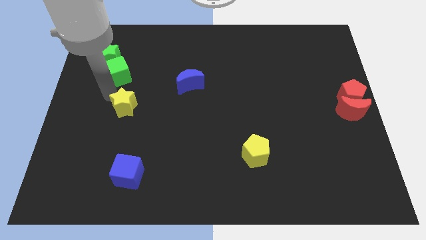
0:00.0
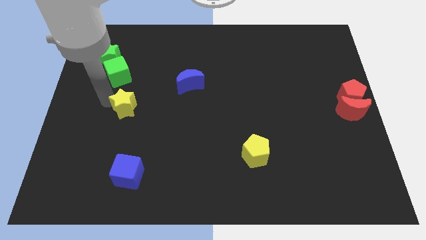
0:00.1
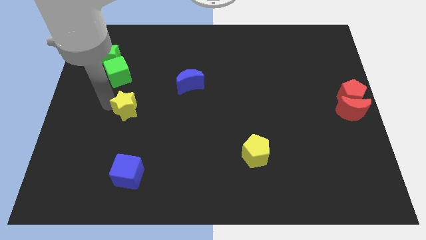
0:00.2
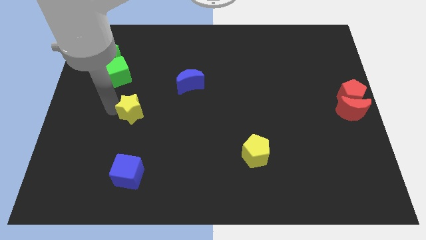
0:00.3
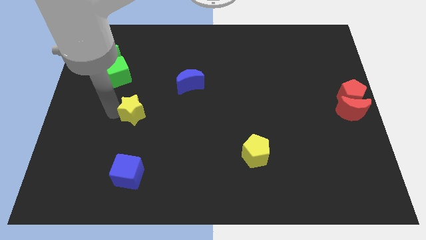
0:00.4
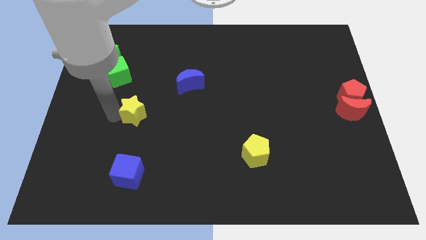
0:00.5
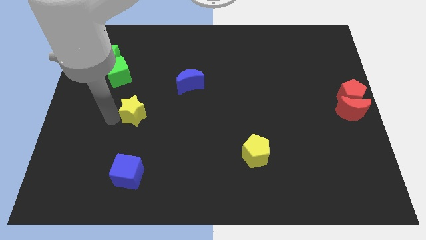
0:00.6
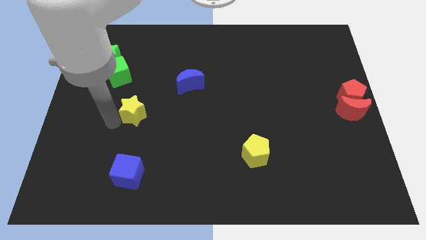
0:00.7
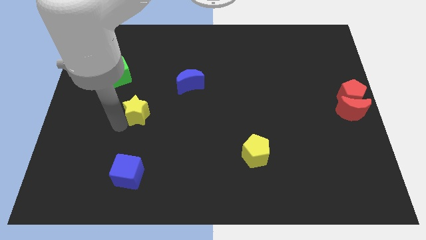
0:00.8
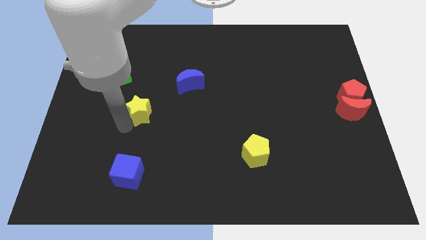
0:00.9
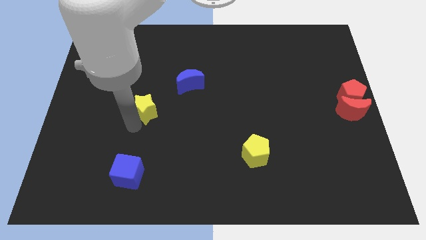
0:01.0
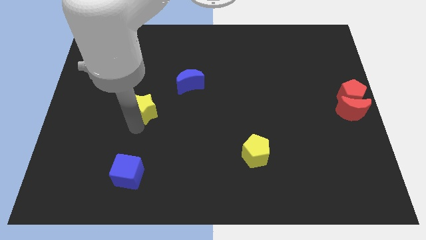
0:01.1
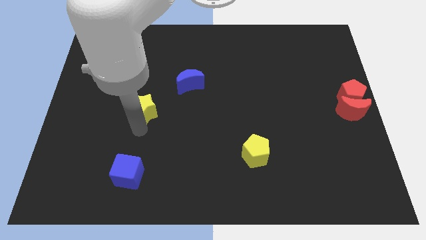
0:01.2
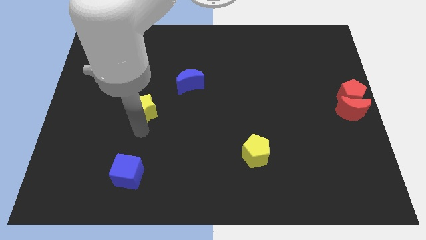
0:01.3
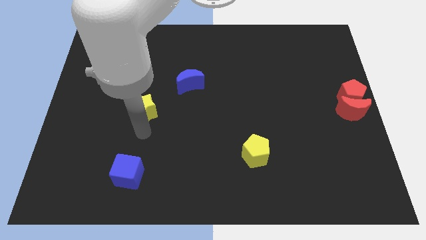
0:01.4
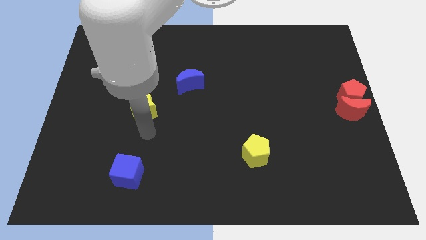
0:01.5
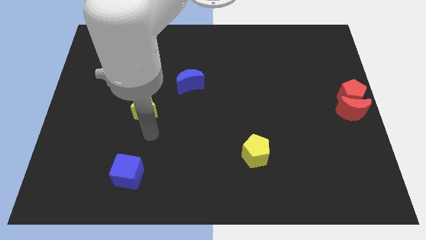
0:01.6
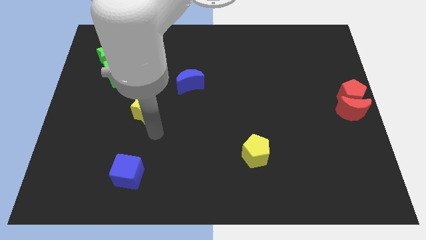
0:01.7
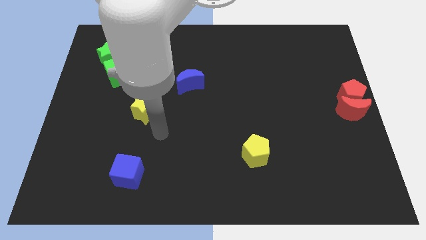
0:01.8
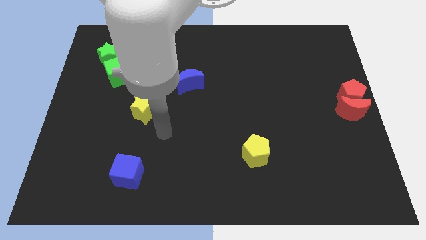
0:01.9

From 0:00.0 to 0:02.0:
move the yellow star vertically to the top of the blue cube

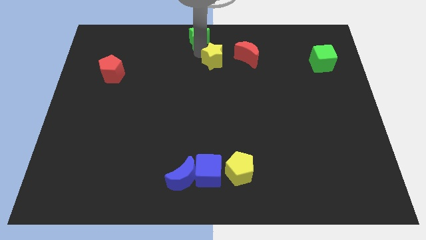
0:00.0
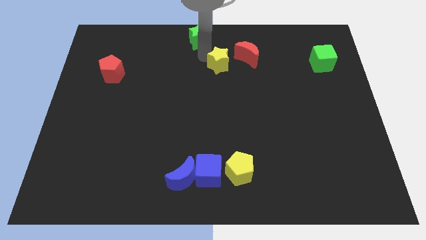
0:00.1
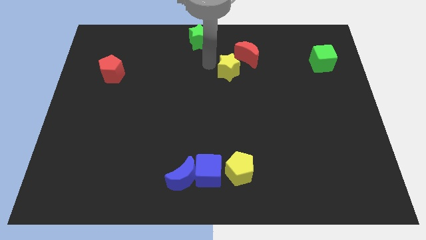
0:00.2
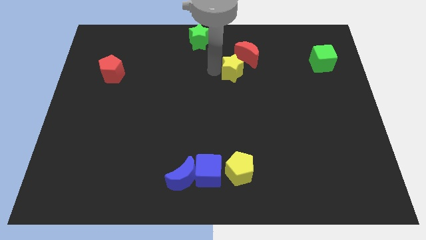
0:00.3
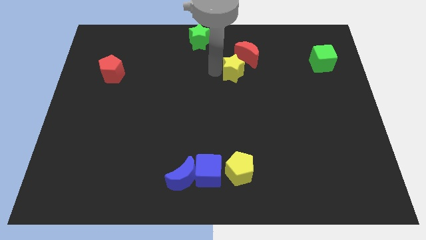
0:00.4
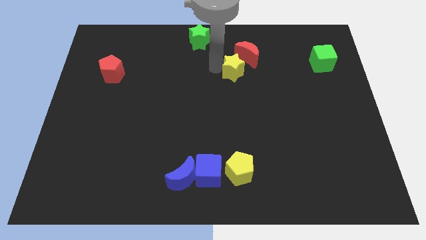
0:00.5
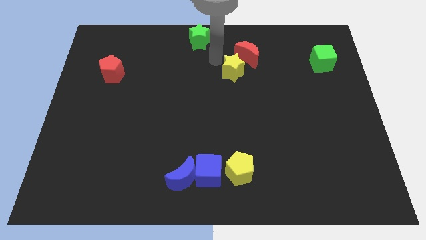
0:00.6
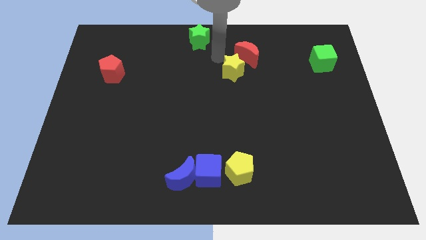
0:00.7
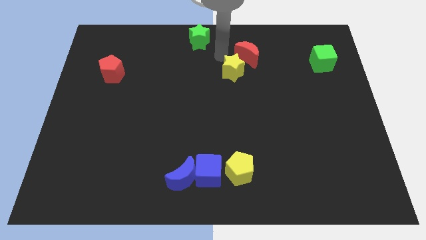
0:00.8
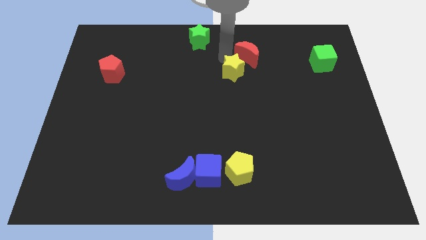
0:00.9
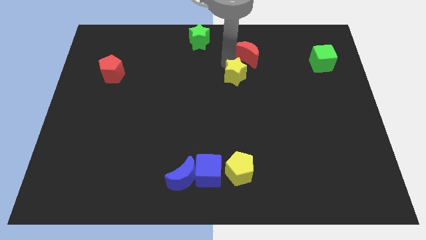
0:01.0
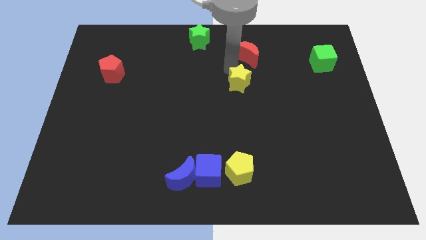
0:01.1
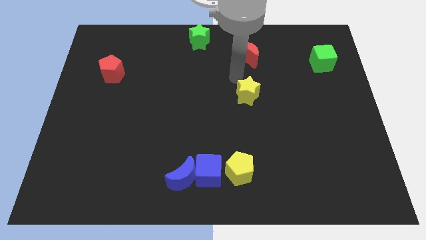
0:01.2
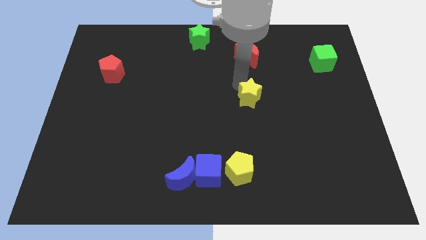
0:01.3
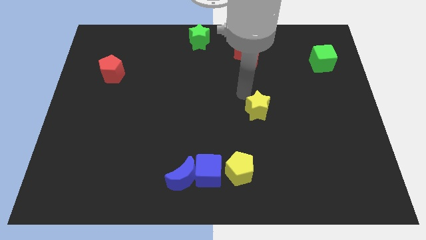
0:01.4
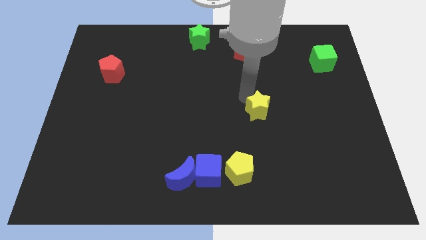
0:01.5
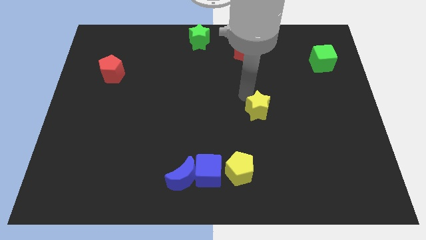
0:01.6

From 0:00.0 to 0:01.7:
push the yellow star towards the bottom side of the board

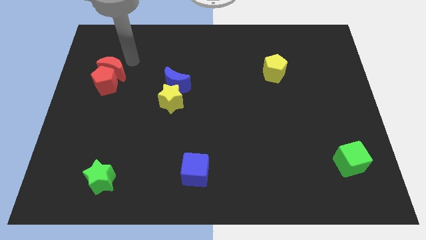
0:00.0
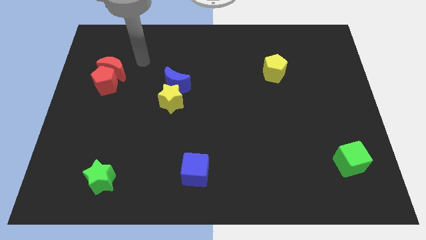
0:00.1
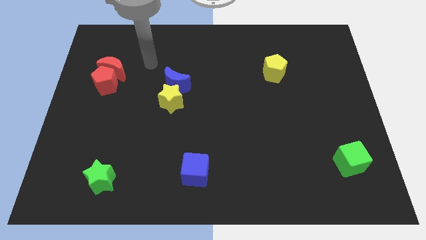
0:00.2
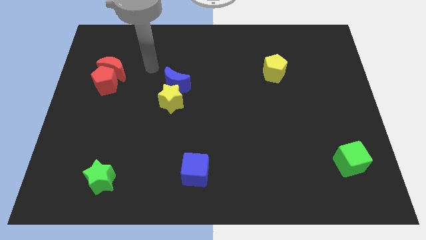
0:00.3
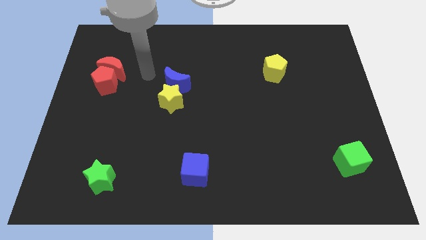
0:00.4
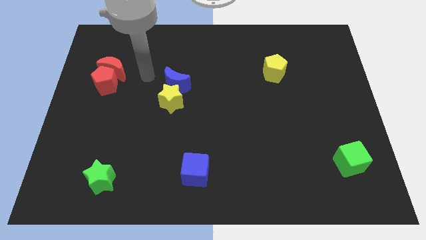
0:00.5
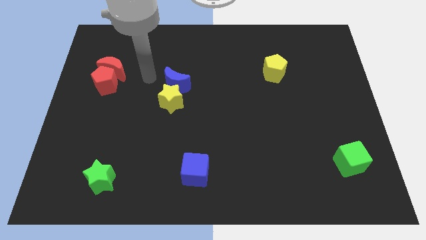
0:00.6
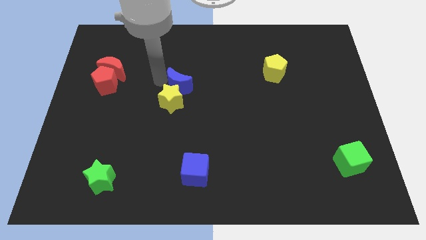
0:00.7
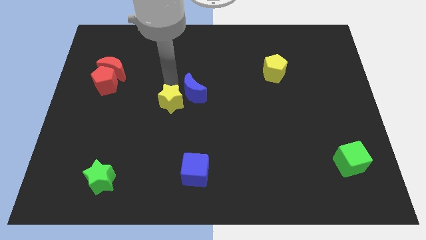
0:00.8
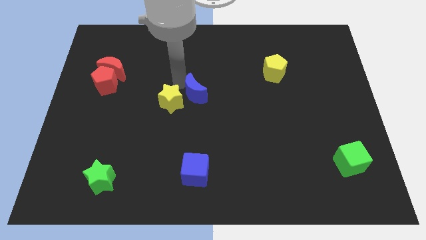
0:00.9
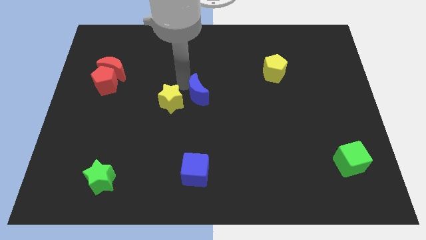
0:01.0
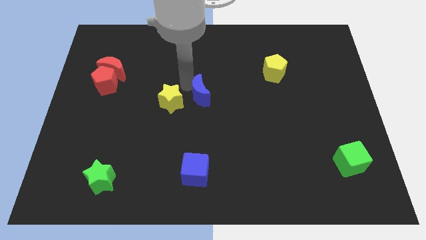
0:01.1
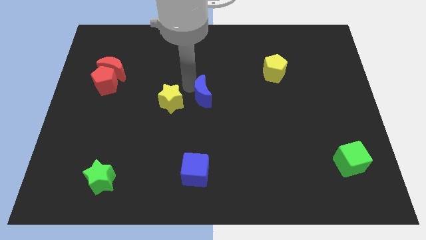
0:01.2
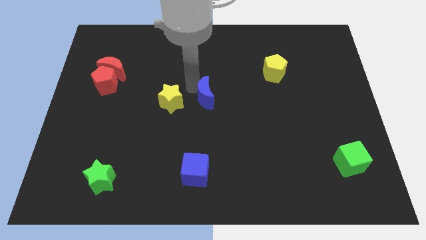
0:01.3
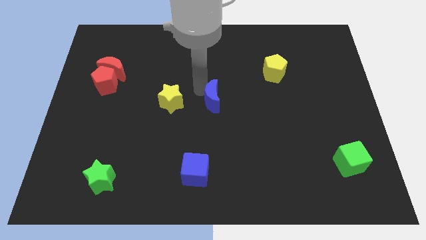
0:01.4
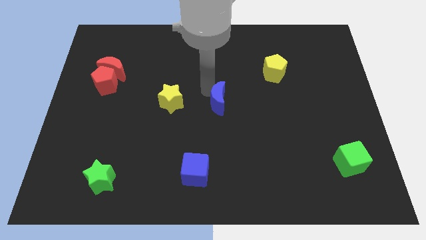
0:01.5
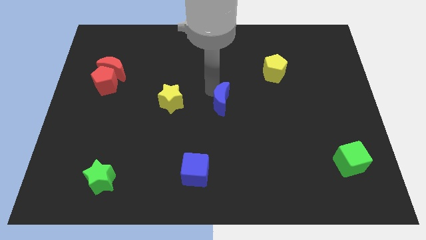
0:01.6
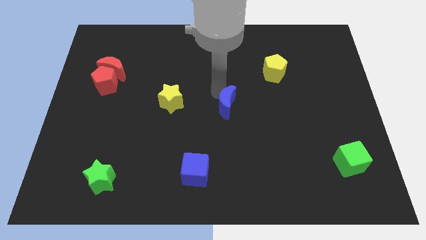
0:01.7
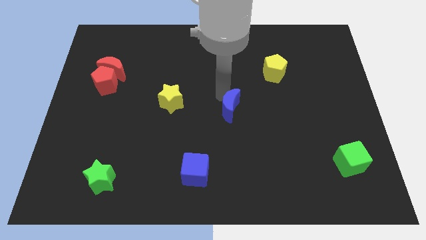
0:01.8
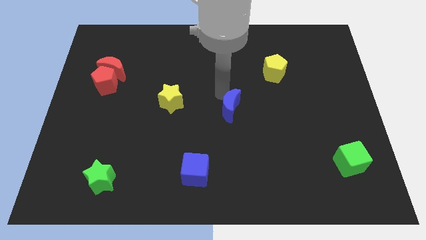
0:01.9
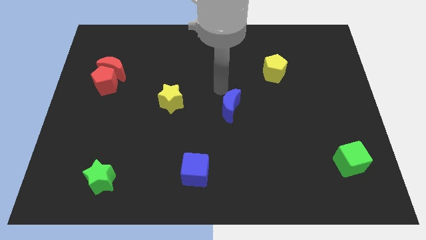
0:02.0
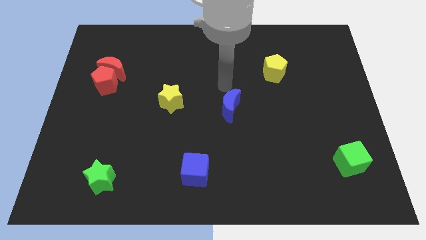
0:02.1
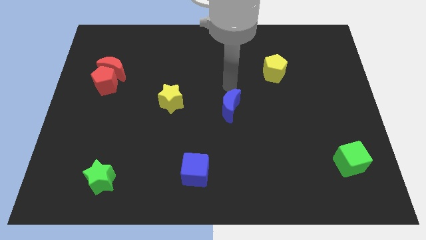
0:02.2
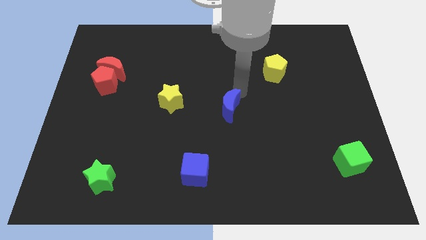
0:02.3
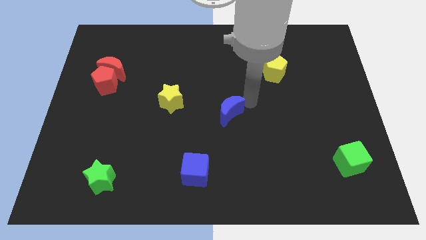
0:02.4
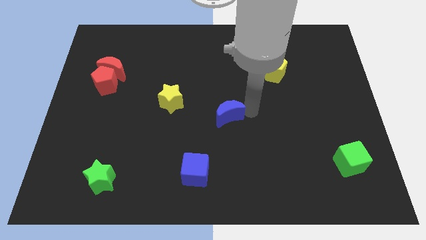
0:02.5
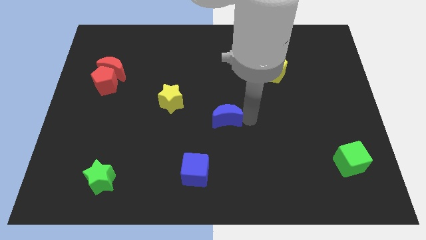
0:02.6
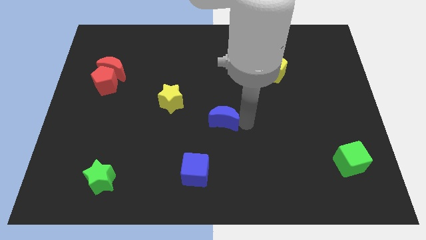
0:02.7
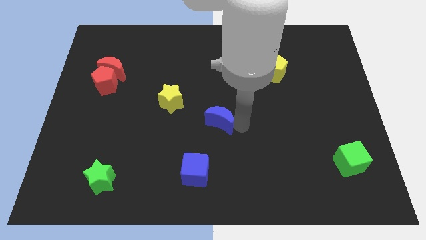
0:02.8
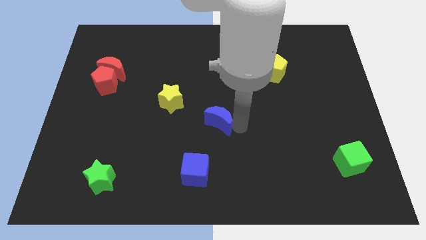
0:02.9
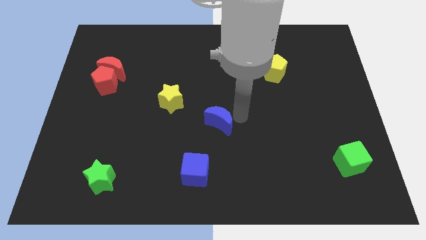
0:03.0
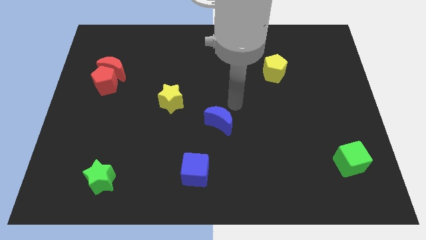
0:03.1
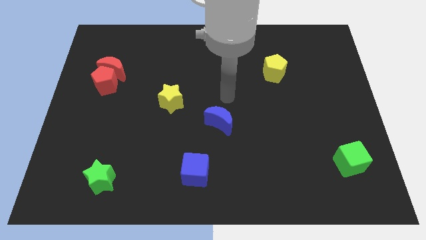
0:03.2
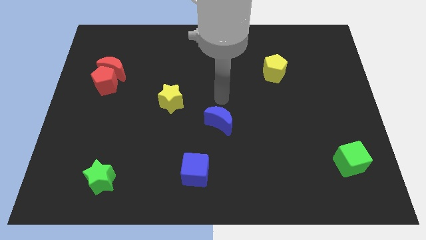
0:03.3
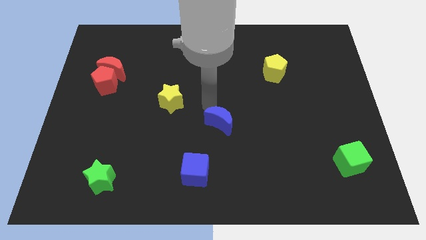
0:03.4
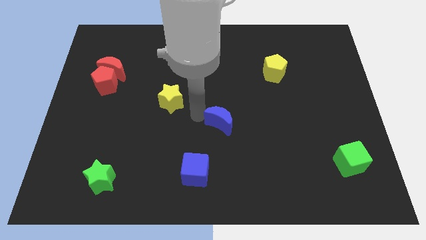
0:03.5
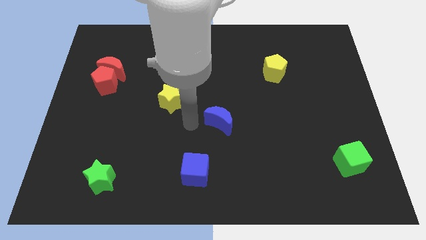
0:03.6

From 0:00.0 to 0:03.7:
push the blue crescent to the center of the board

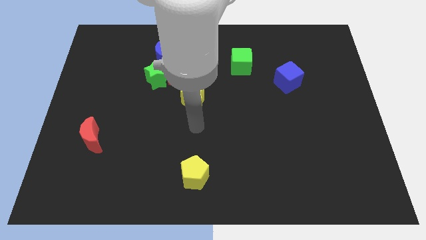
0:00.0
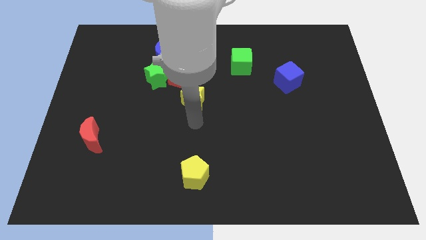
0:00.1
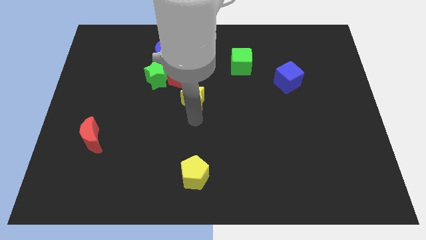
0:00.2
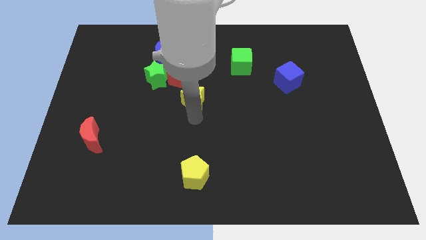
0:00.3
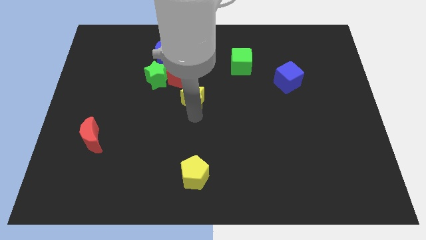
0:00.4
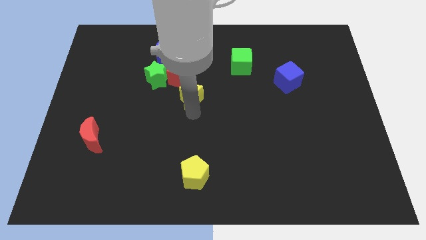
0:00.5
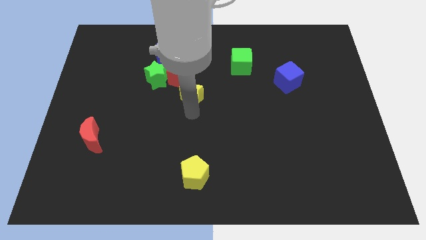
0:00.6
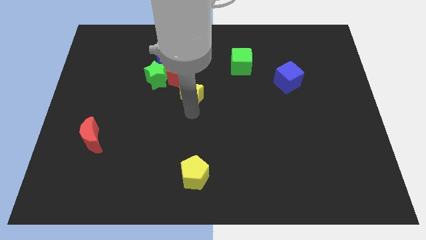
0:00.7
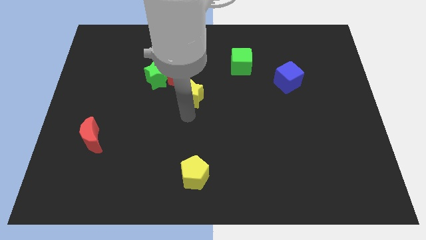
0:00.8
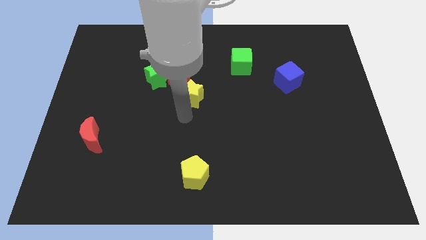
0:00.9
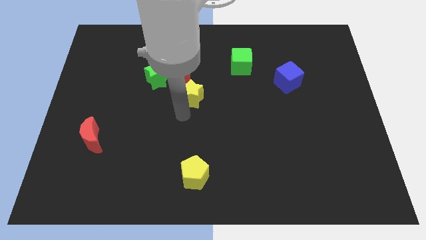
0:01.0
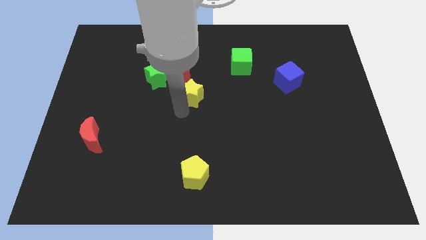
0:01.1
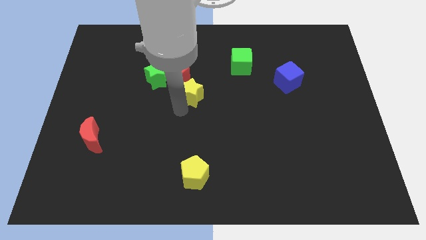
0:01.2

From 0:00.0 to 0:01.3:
move yellow pentagon slightly upwards

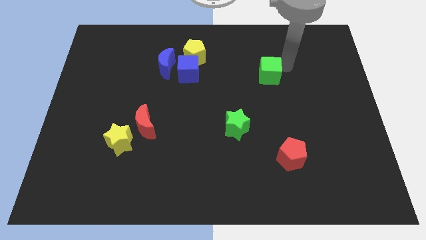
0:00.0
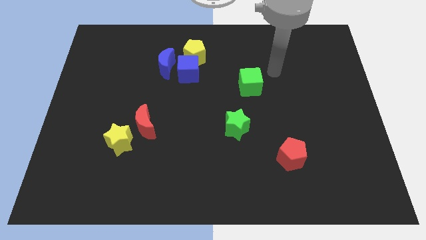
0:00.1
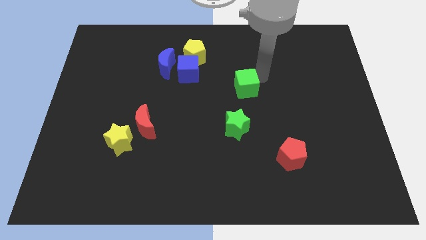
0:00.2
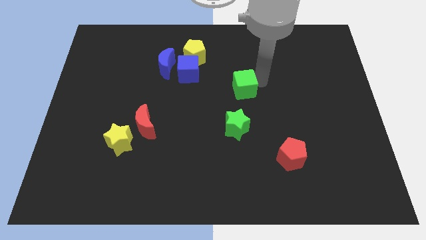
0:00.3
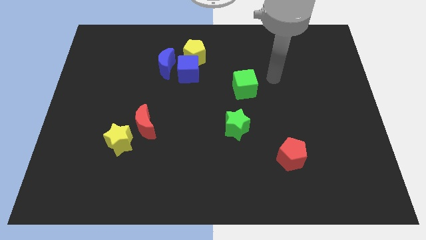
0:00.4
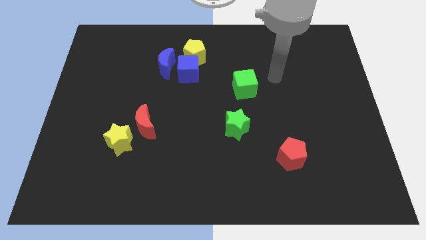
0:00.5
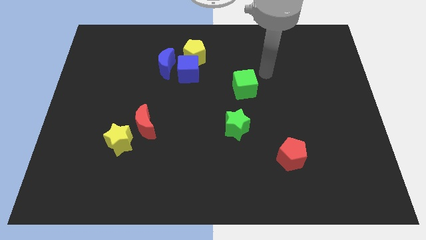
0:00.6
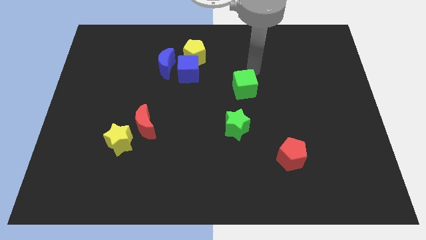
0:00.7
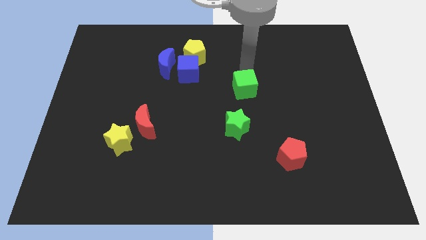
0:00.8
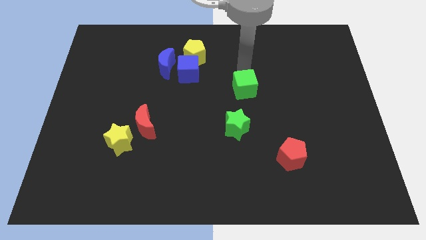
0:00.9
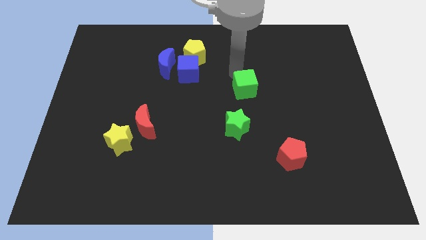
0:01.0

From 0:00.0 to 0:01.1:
move green cube above green star
